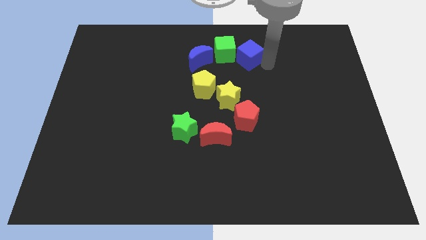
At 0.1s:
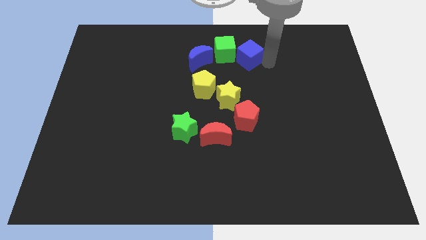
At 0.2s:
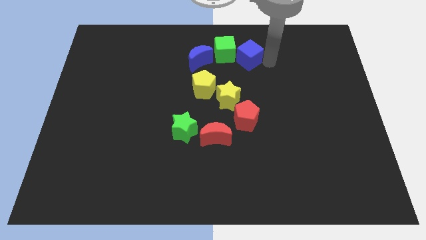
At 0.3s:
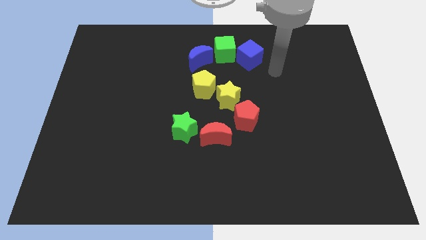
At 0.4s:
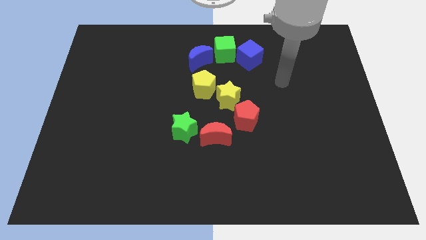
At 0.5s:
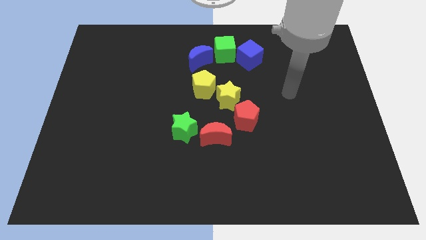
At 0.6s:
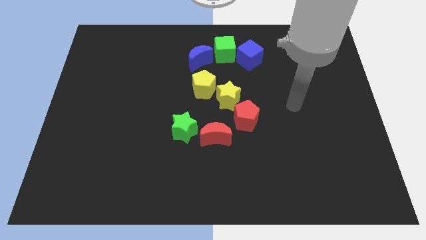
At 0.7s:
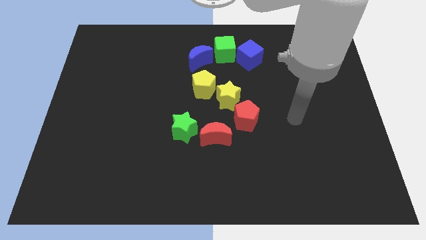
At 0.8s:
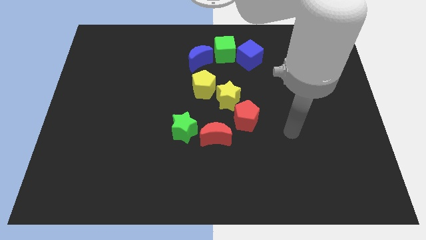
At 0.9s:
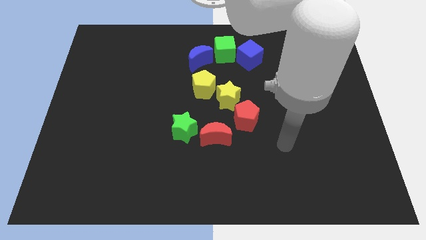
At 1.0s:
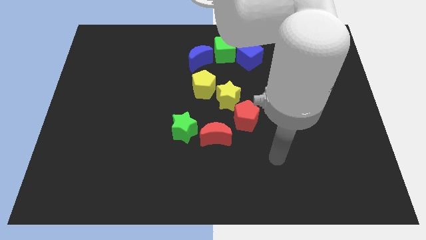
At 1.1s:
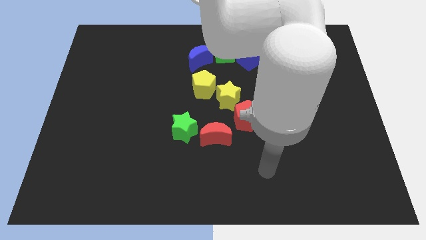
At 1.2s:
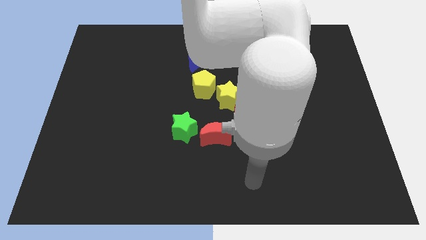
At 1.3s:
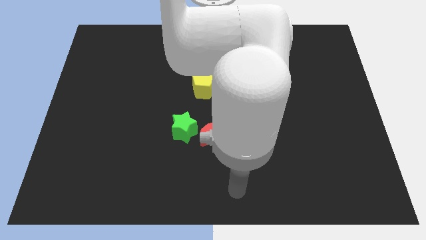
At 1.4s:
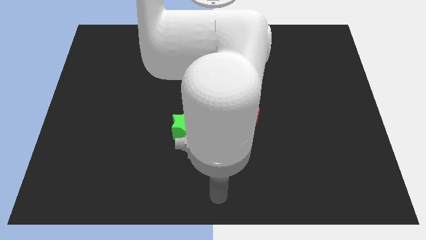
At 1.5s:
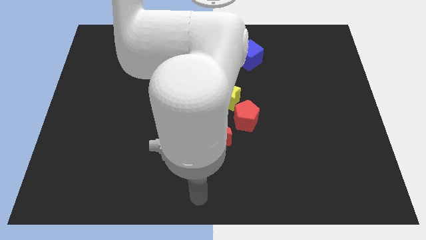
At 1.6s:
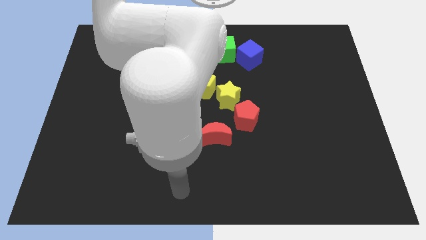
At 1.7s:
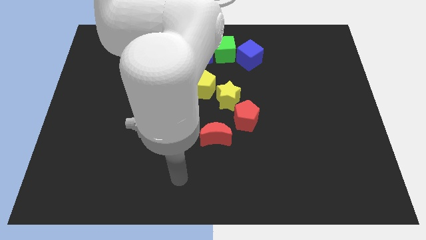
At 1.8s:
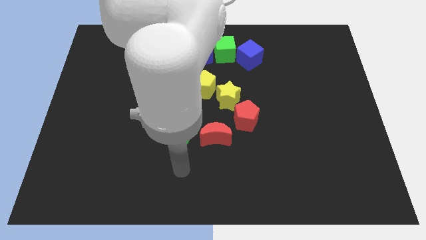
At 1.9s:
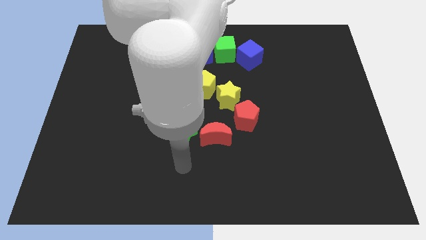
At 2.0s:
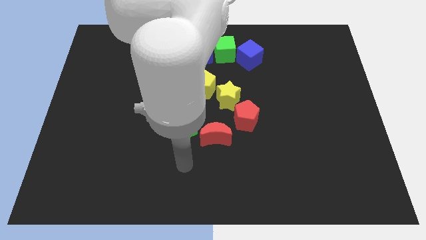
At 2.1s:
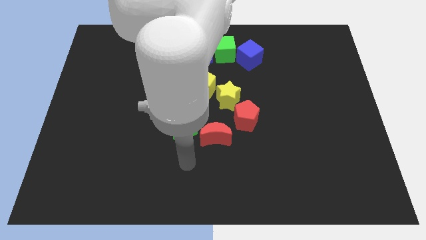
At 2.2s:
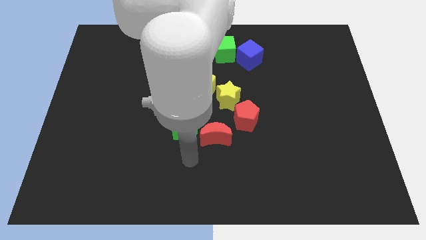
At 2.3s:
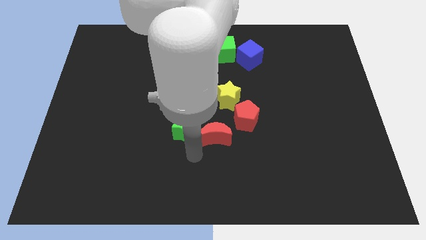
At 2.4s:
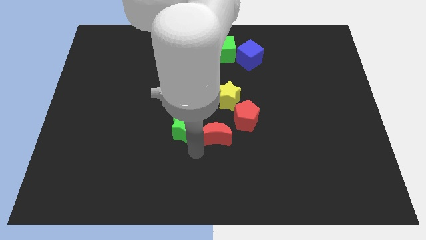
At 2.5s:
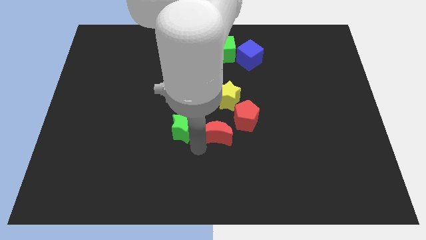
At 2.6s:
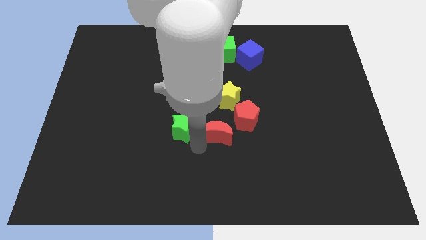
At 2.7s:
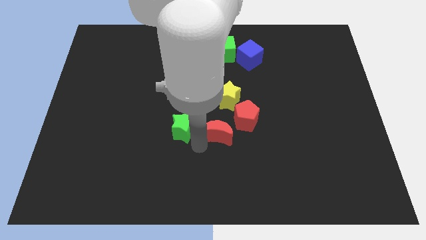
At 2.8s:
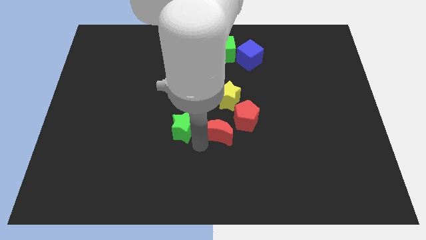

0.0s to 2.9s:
move your arm away from blue cube to red moon

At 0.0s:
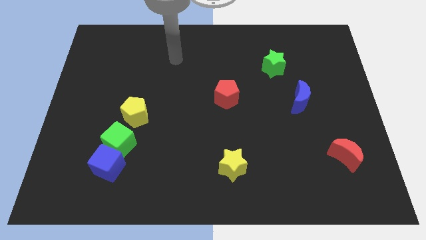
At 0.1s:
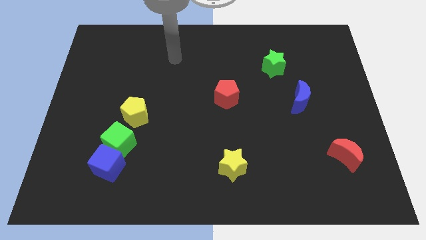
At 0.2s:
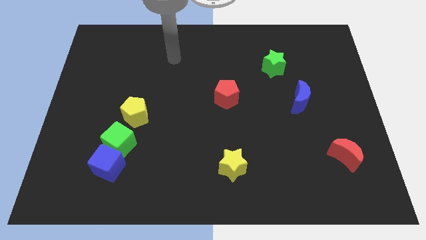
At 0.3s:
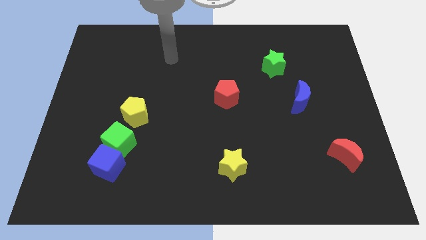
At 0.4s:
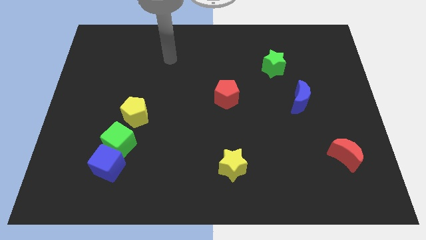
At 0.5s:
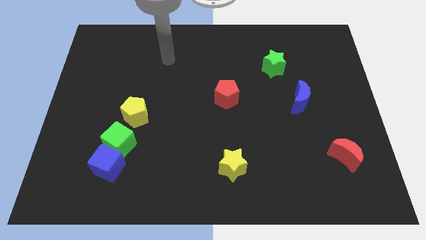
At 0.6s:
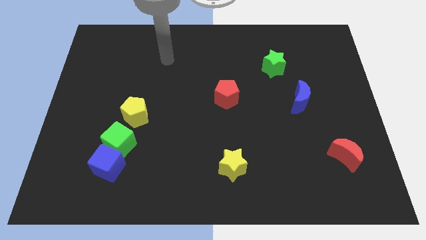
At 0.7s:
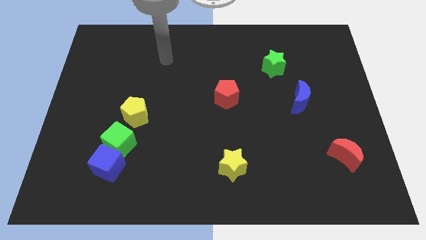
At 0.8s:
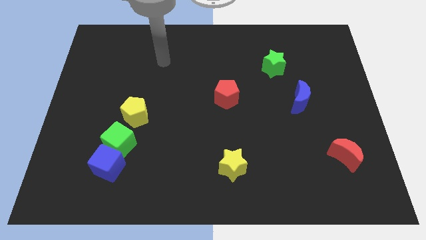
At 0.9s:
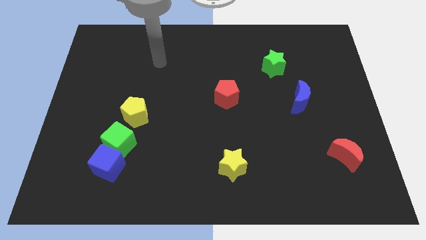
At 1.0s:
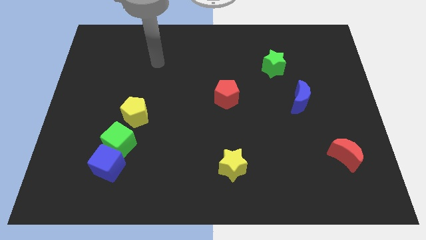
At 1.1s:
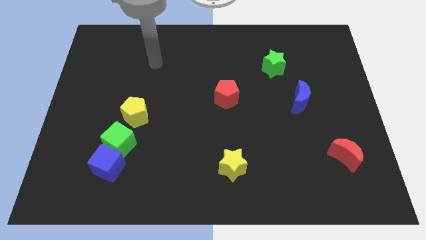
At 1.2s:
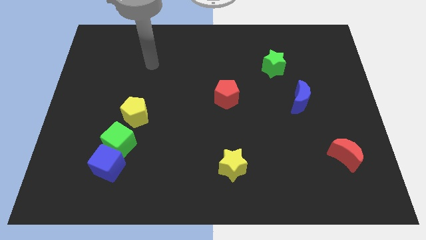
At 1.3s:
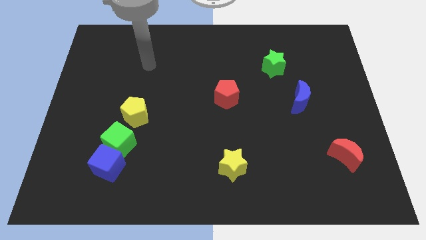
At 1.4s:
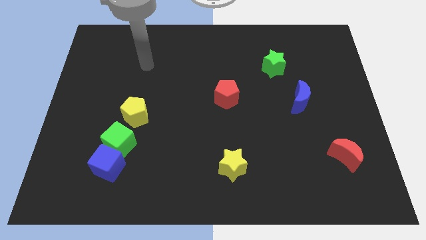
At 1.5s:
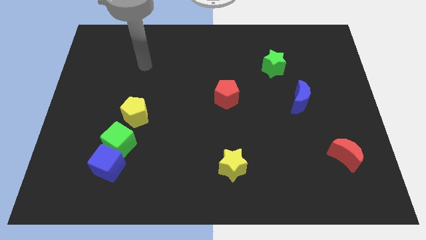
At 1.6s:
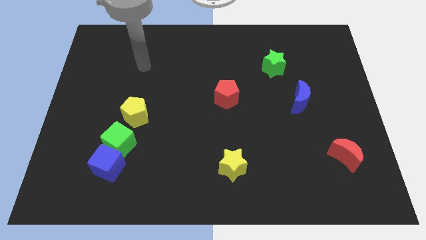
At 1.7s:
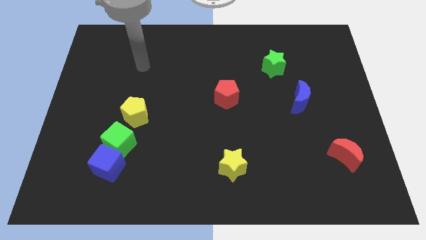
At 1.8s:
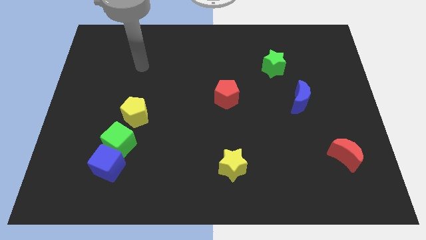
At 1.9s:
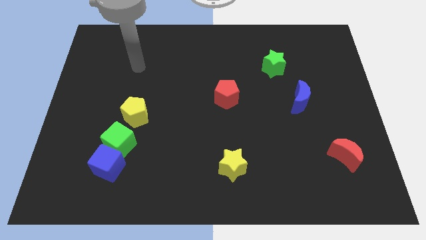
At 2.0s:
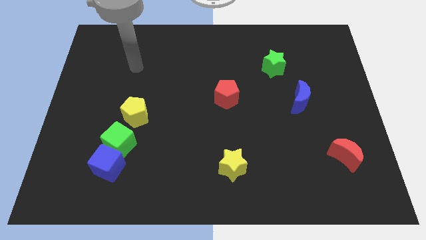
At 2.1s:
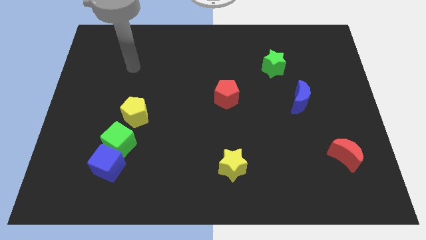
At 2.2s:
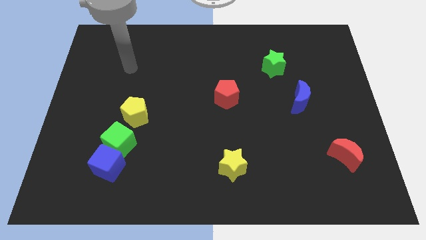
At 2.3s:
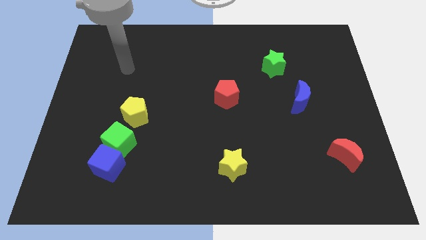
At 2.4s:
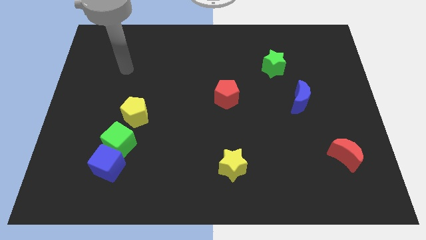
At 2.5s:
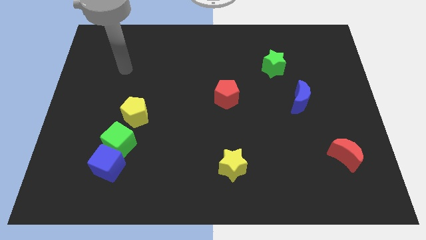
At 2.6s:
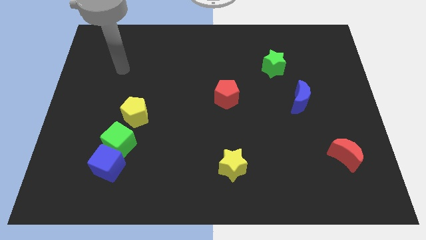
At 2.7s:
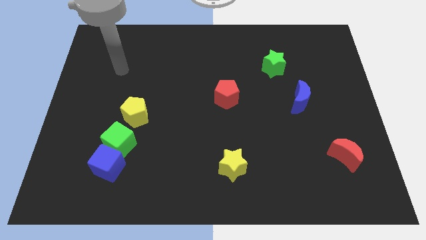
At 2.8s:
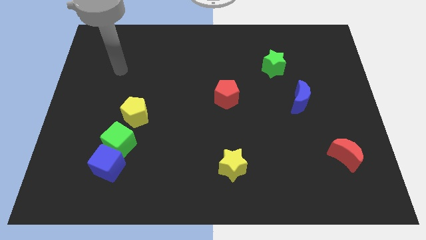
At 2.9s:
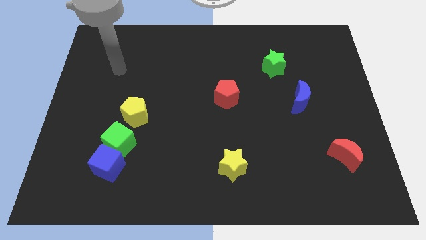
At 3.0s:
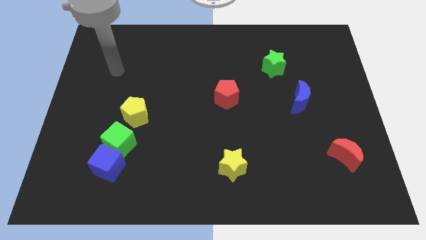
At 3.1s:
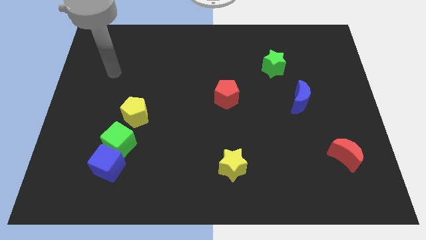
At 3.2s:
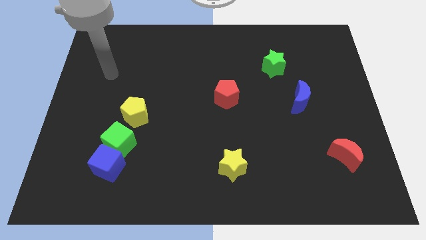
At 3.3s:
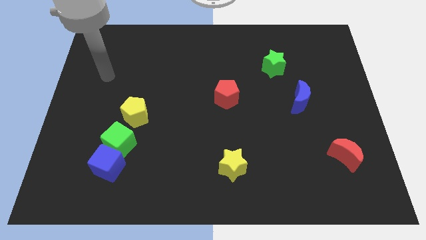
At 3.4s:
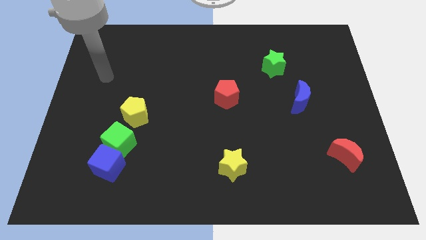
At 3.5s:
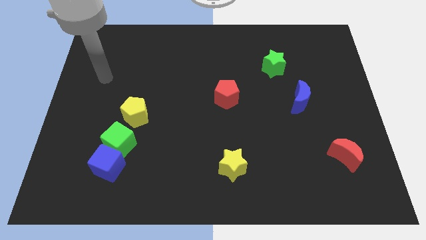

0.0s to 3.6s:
point your arm at the top left of the yellow pentagon

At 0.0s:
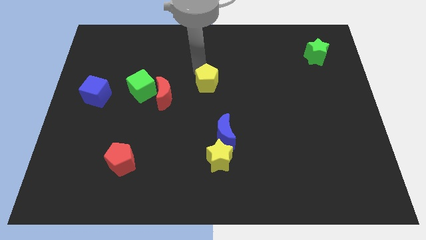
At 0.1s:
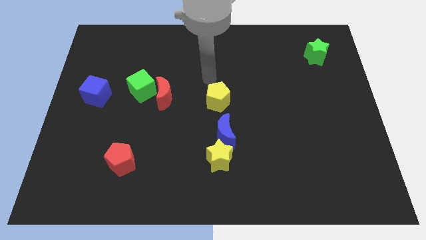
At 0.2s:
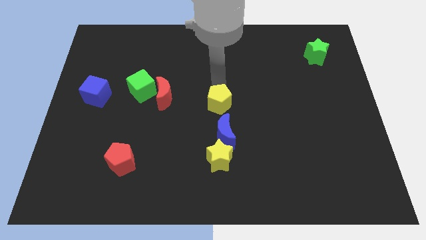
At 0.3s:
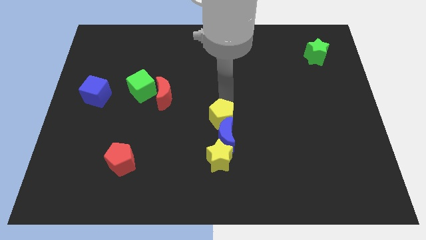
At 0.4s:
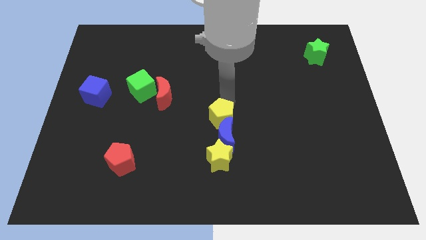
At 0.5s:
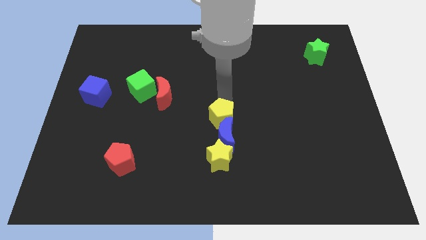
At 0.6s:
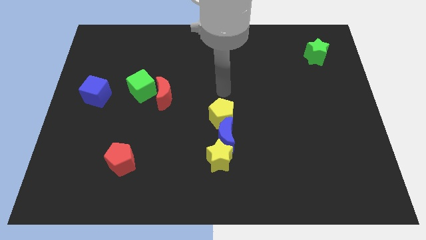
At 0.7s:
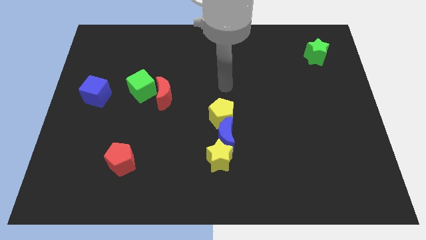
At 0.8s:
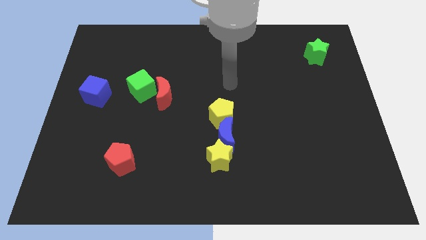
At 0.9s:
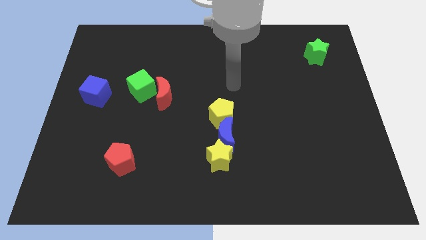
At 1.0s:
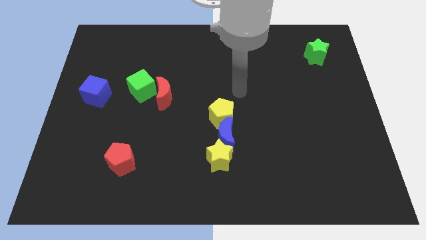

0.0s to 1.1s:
move the yellow pentagon on the center of the board

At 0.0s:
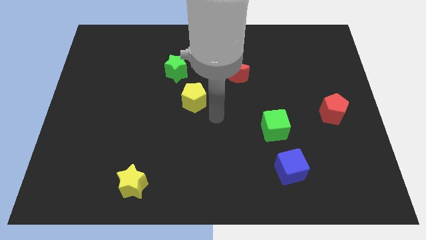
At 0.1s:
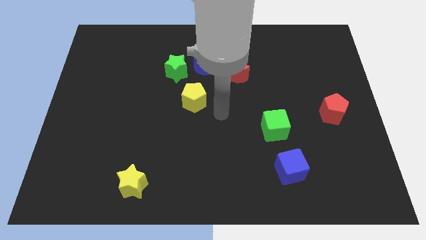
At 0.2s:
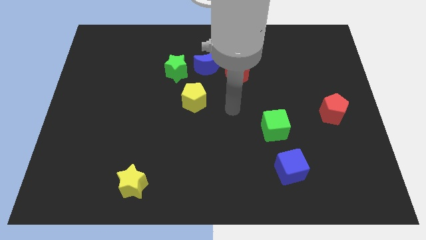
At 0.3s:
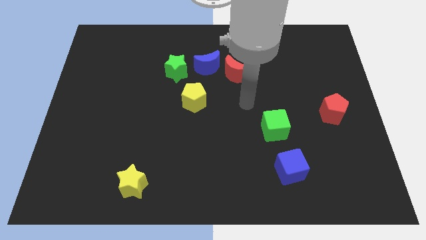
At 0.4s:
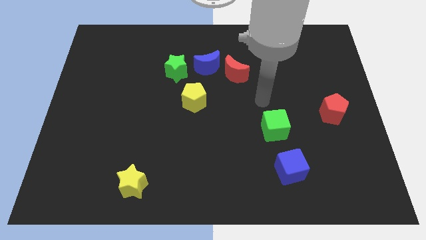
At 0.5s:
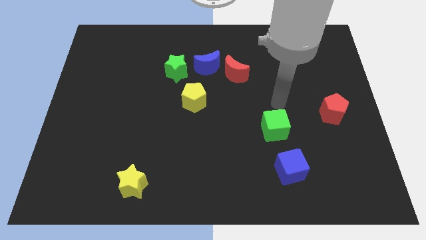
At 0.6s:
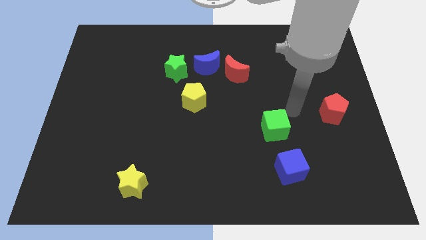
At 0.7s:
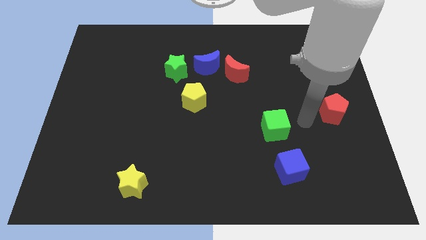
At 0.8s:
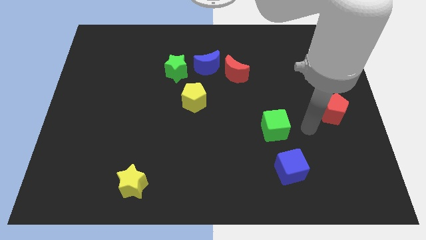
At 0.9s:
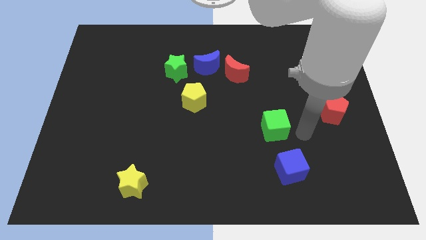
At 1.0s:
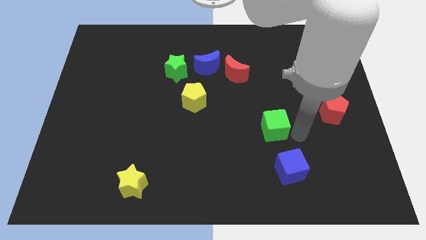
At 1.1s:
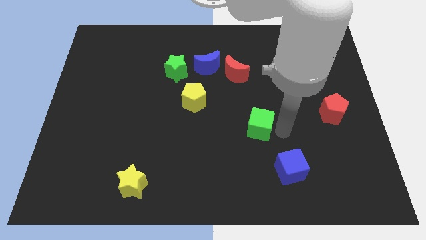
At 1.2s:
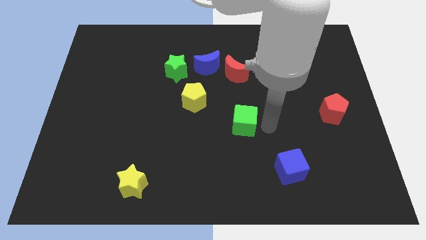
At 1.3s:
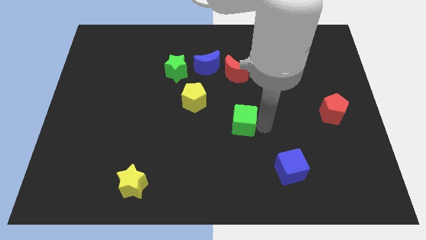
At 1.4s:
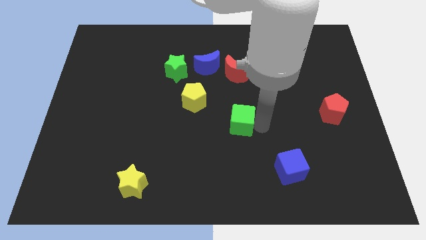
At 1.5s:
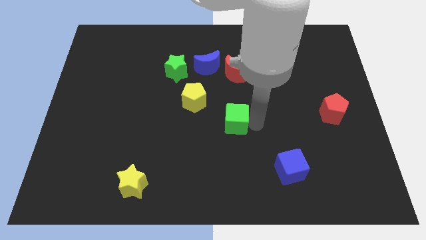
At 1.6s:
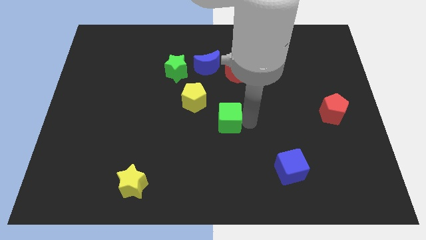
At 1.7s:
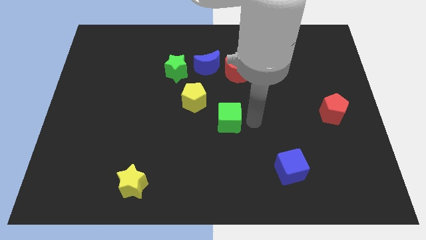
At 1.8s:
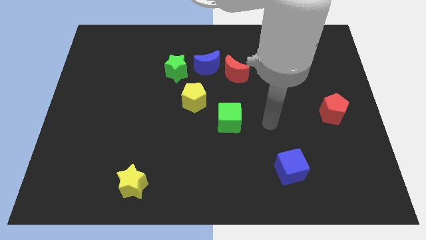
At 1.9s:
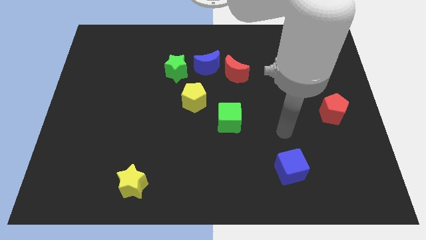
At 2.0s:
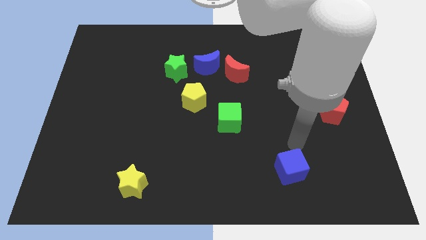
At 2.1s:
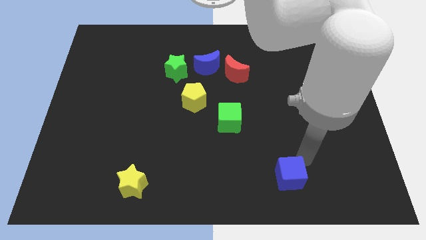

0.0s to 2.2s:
move the green cube diagonally left of the blue cube
